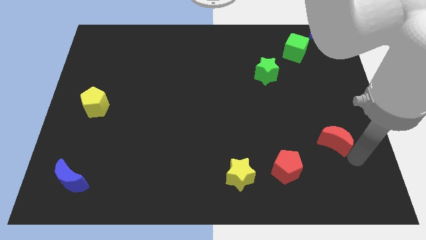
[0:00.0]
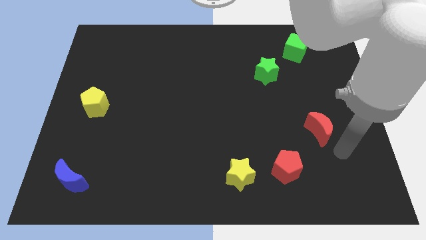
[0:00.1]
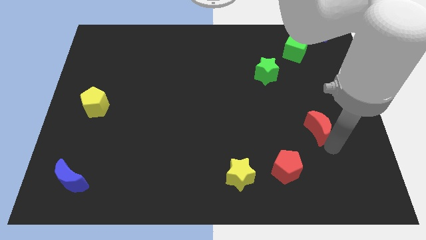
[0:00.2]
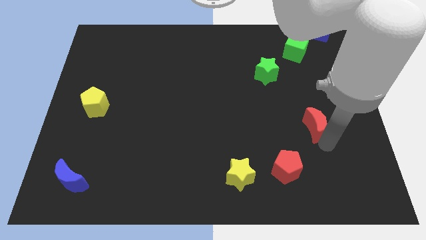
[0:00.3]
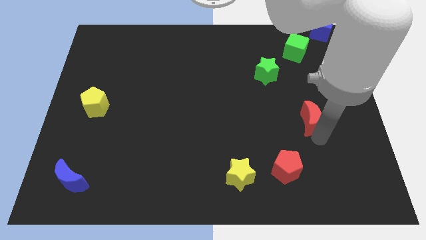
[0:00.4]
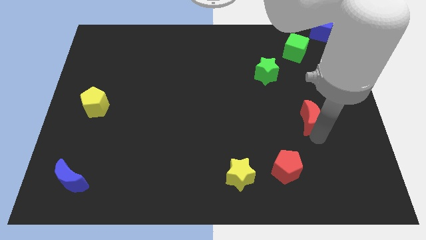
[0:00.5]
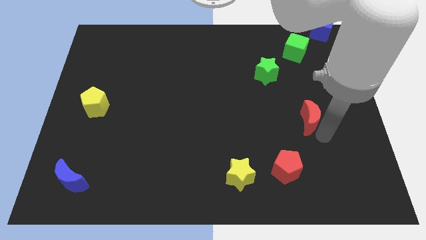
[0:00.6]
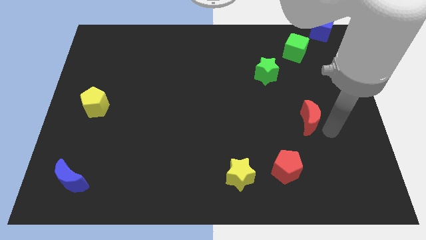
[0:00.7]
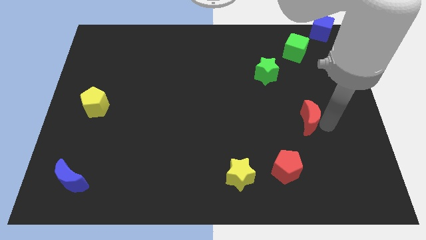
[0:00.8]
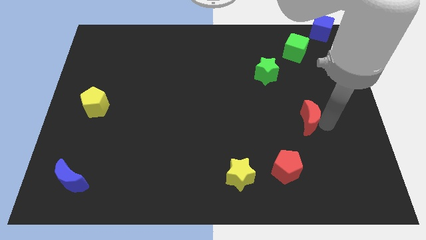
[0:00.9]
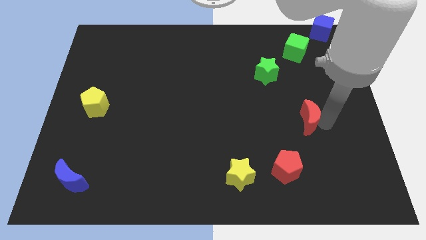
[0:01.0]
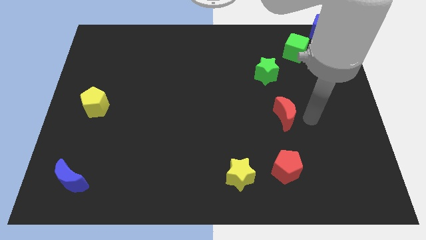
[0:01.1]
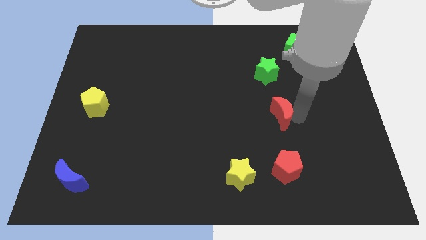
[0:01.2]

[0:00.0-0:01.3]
push the red crescent above the red pentagon

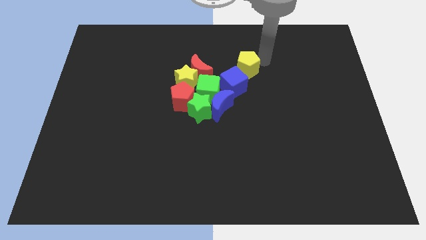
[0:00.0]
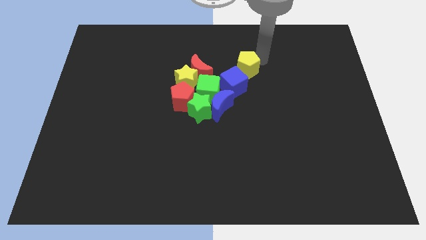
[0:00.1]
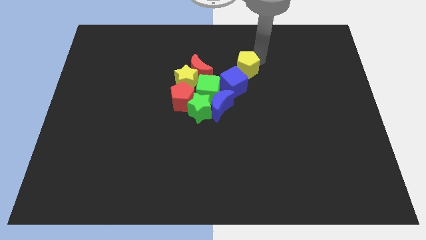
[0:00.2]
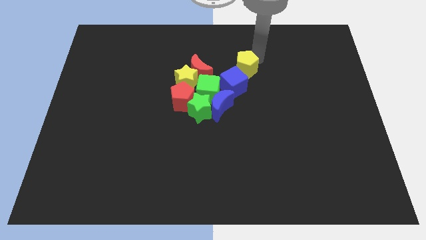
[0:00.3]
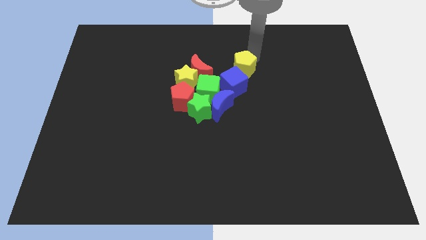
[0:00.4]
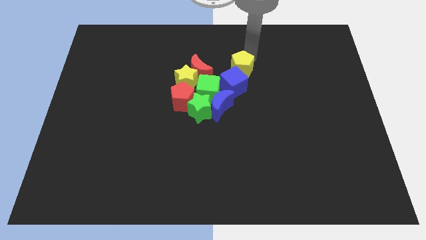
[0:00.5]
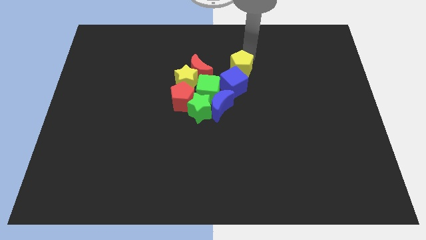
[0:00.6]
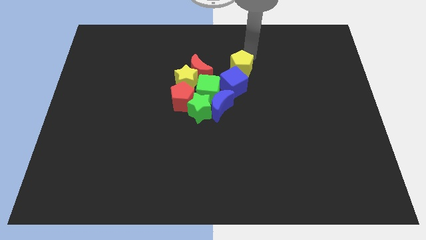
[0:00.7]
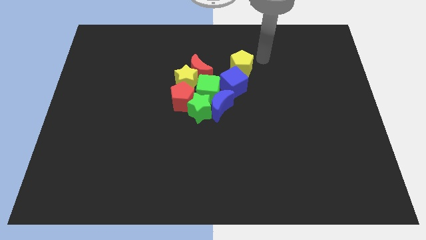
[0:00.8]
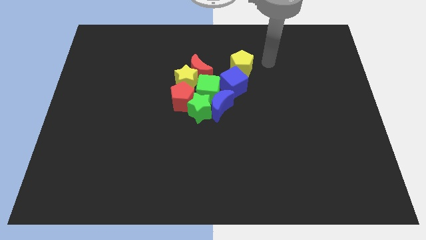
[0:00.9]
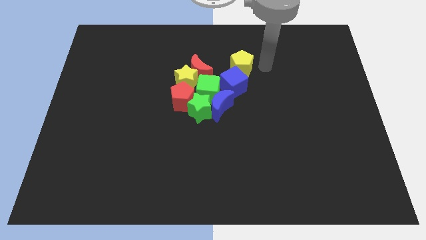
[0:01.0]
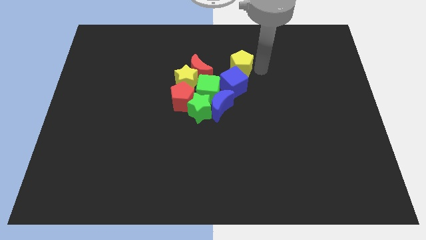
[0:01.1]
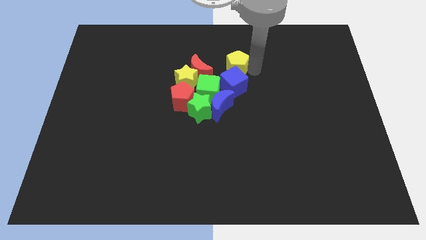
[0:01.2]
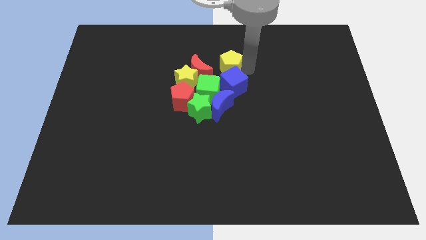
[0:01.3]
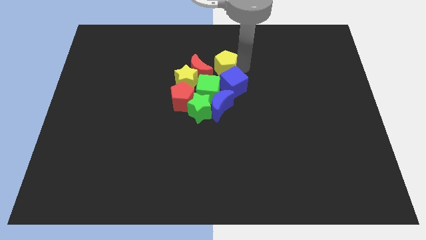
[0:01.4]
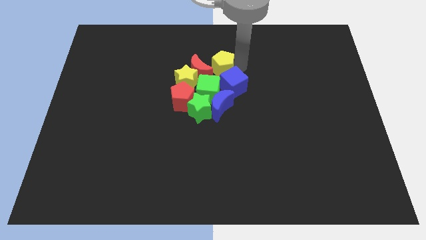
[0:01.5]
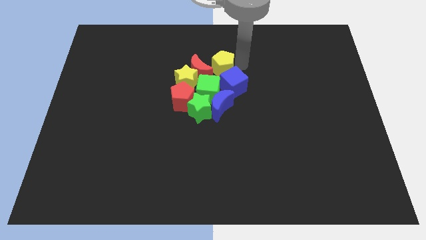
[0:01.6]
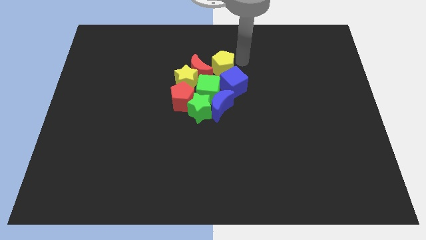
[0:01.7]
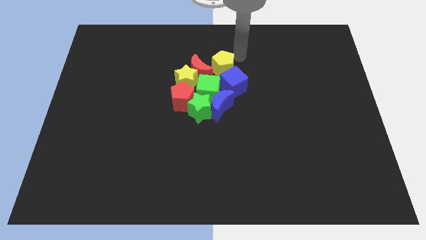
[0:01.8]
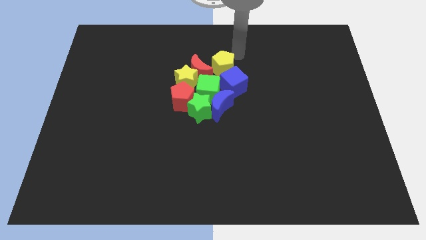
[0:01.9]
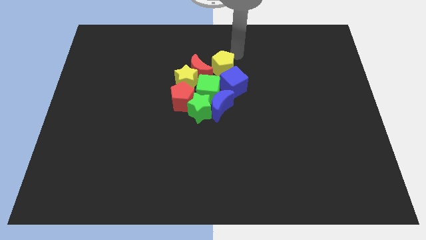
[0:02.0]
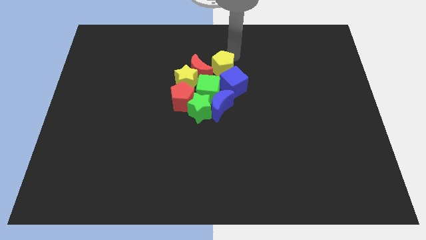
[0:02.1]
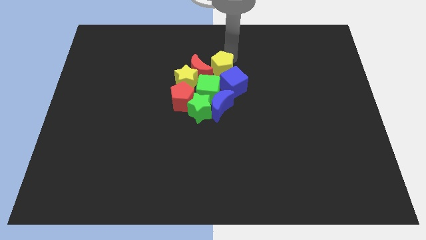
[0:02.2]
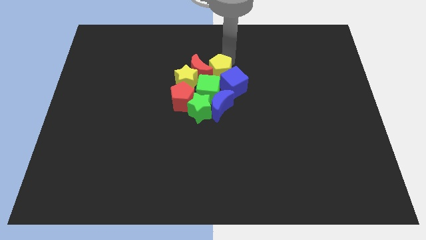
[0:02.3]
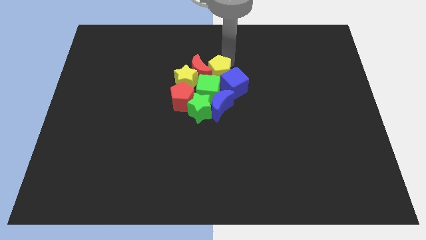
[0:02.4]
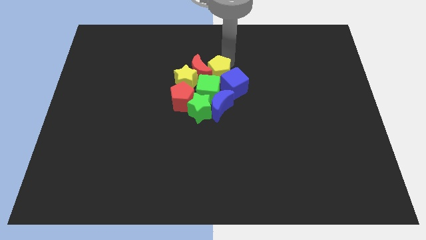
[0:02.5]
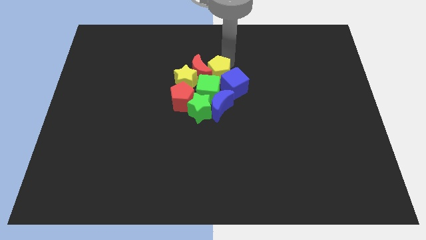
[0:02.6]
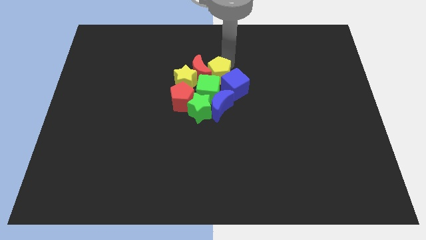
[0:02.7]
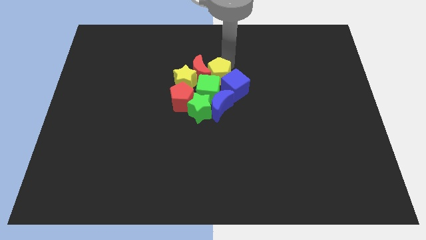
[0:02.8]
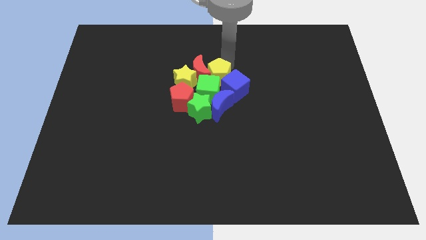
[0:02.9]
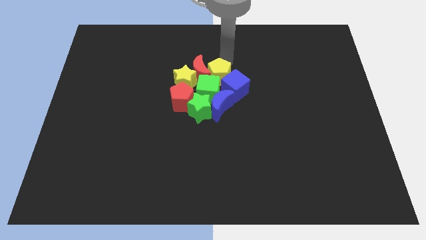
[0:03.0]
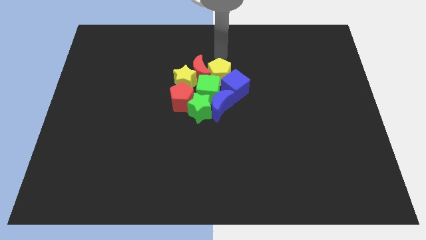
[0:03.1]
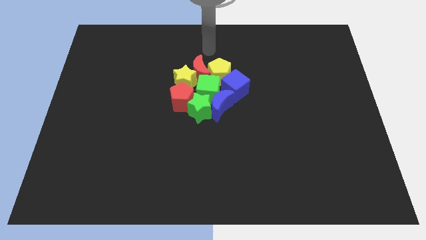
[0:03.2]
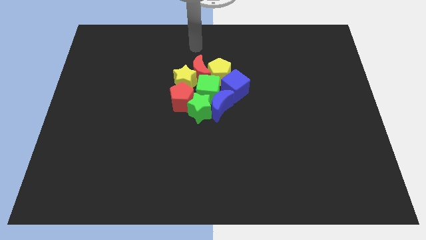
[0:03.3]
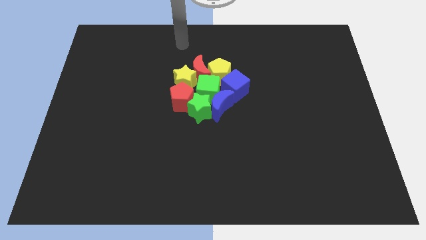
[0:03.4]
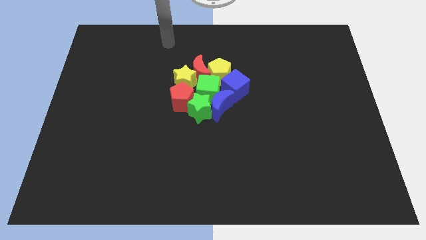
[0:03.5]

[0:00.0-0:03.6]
push the yellow pentagon into the red crescent

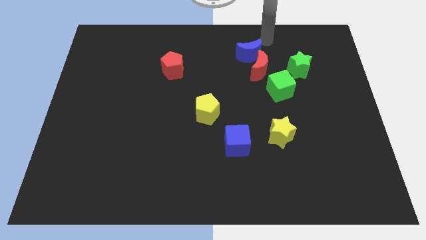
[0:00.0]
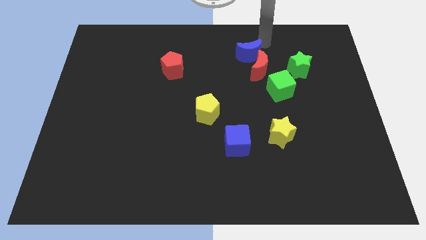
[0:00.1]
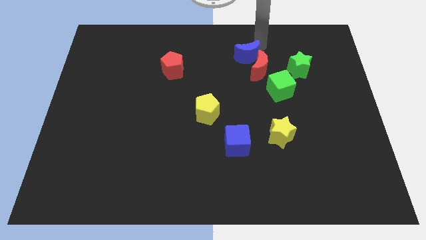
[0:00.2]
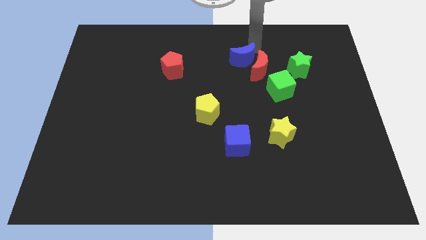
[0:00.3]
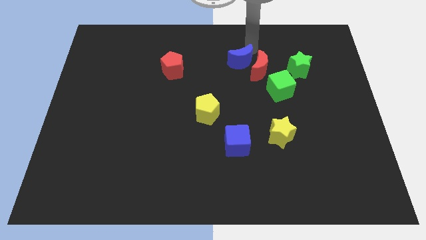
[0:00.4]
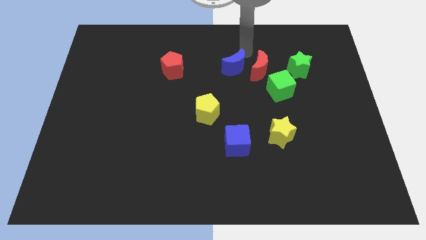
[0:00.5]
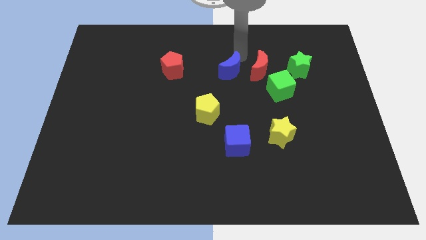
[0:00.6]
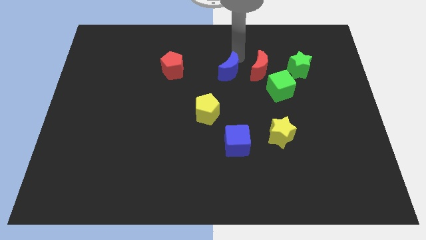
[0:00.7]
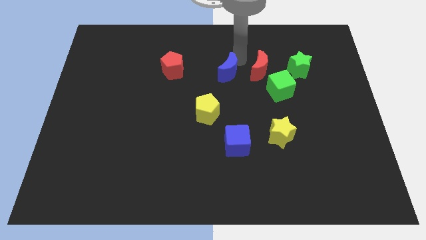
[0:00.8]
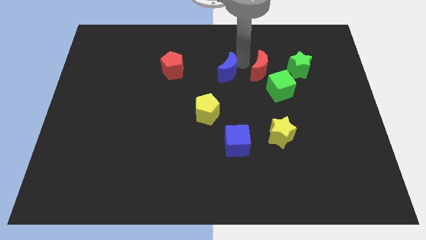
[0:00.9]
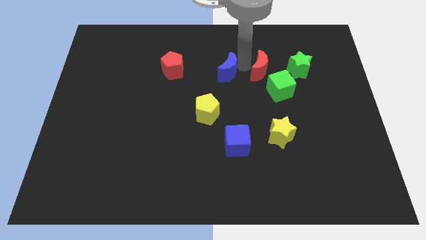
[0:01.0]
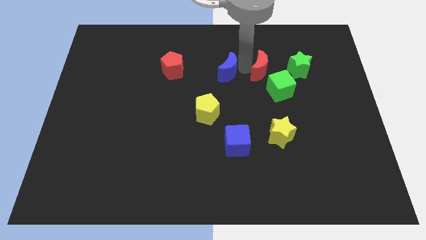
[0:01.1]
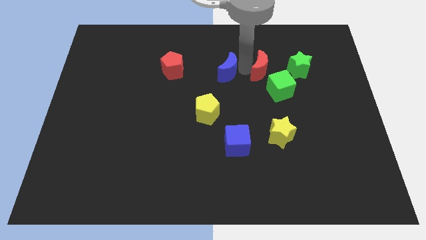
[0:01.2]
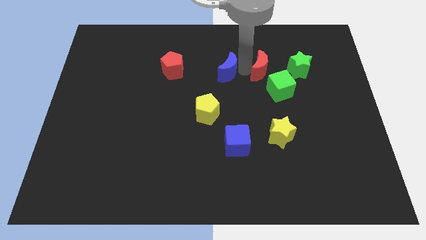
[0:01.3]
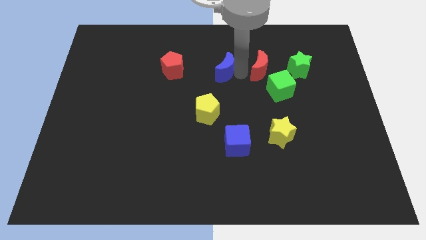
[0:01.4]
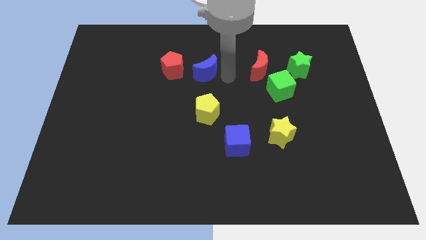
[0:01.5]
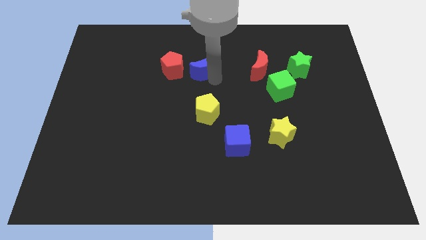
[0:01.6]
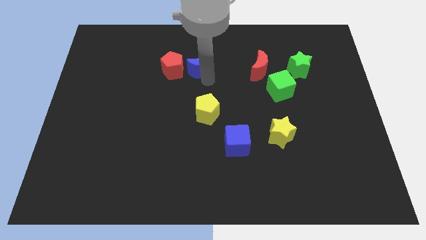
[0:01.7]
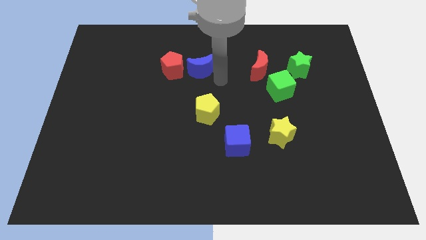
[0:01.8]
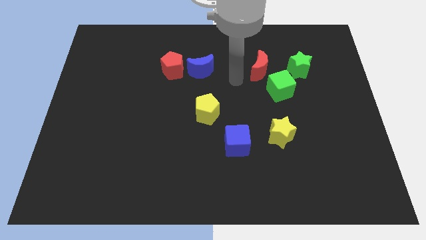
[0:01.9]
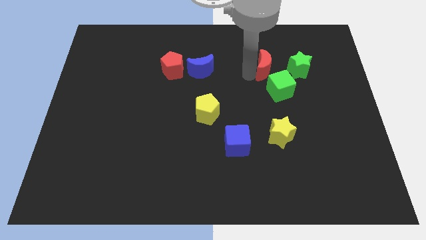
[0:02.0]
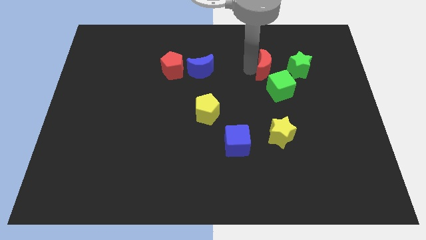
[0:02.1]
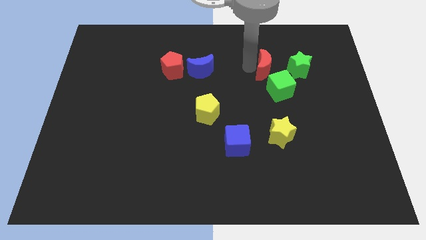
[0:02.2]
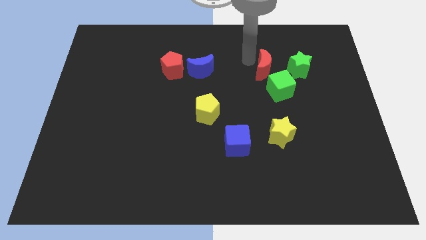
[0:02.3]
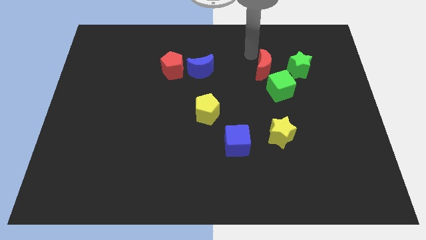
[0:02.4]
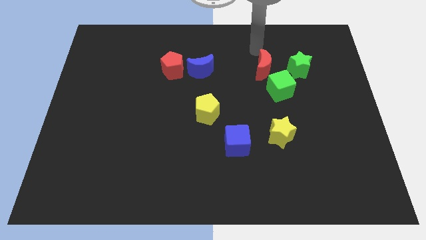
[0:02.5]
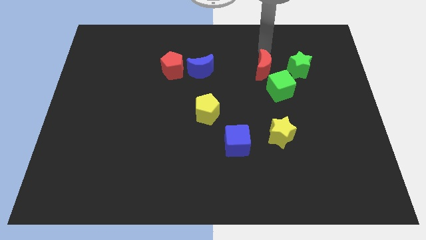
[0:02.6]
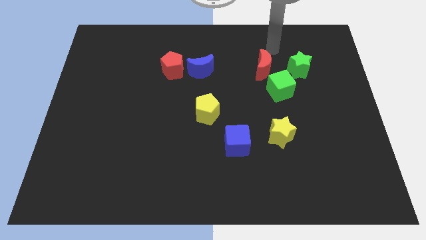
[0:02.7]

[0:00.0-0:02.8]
push the blue crescent to the right of red pentagon

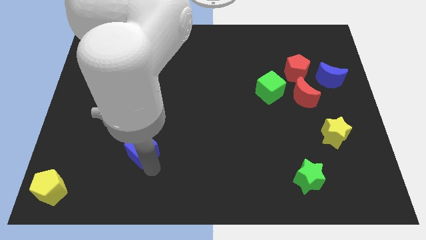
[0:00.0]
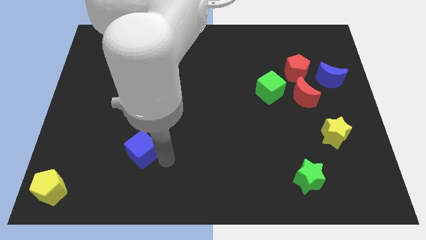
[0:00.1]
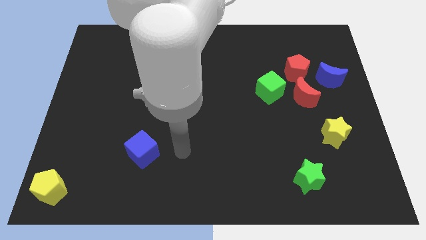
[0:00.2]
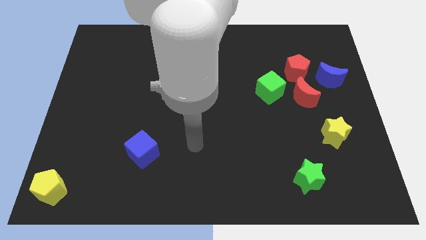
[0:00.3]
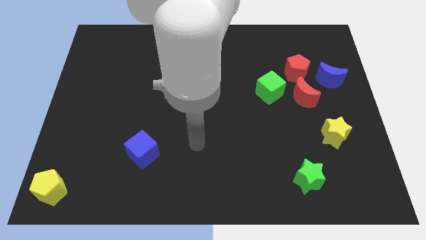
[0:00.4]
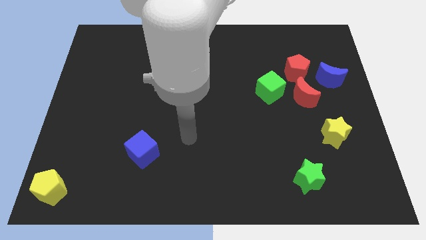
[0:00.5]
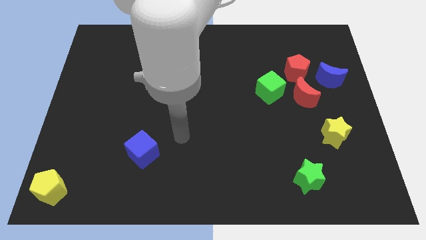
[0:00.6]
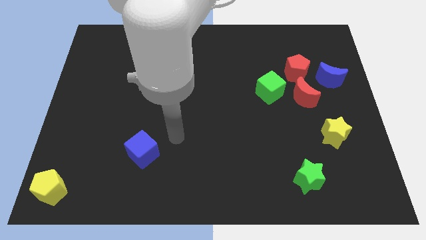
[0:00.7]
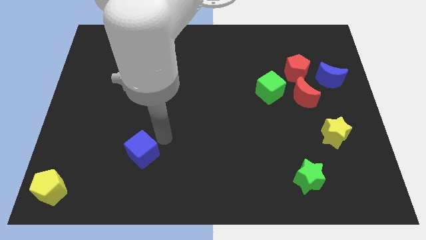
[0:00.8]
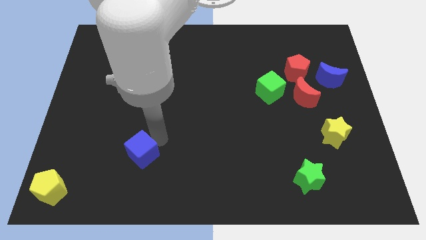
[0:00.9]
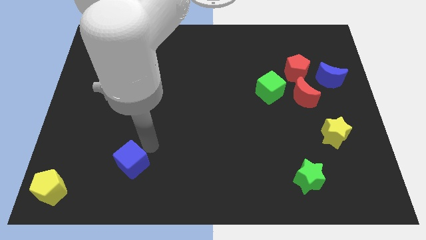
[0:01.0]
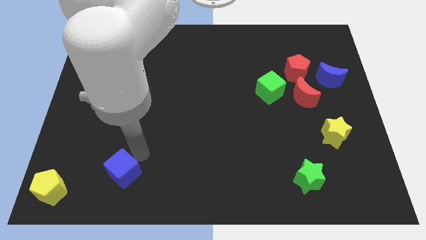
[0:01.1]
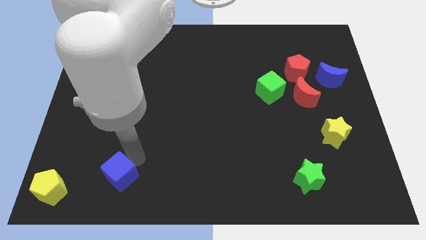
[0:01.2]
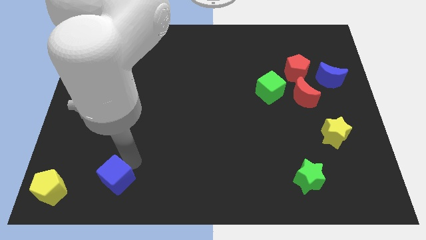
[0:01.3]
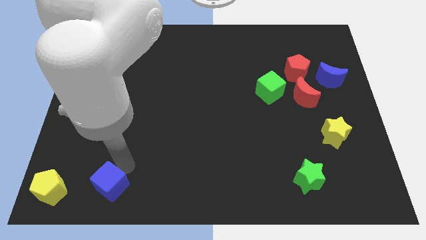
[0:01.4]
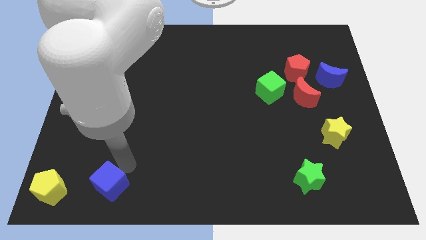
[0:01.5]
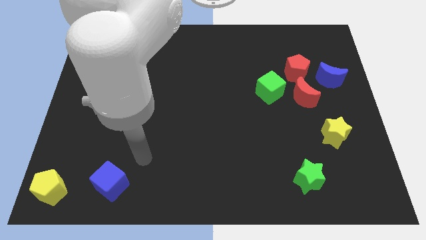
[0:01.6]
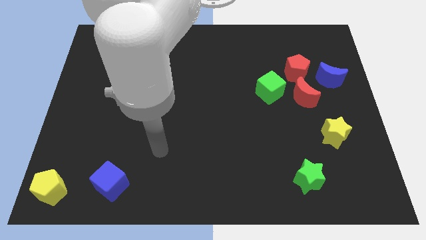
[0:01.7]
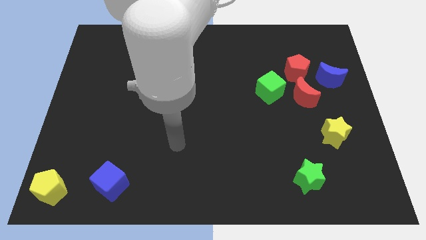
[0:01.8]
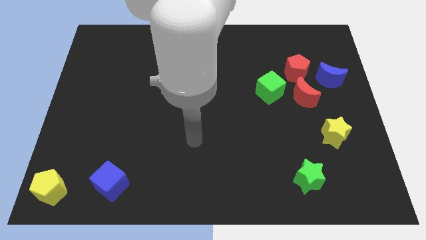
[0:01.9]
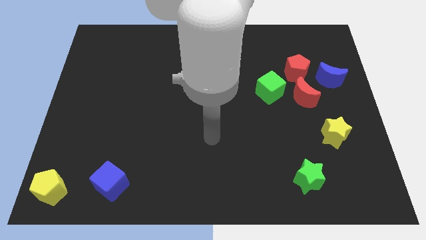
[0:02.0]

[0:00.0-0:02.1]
place blue cube parallel to yellow pentagon
